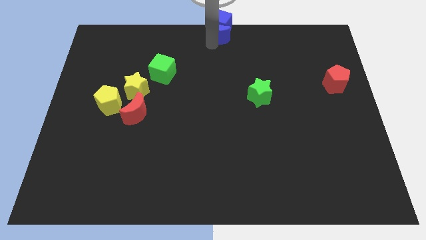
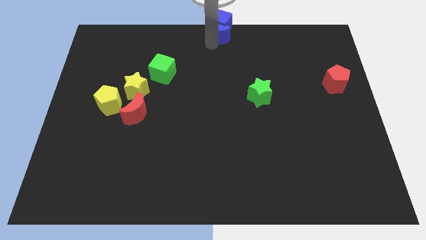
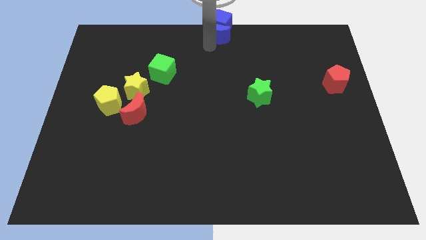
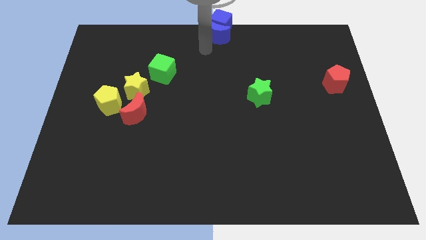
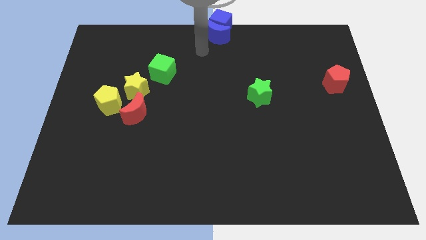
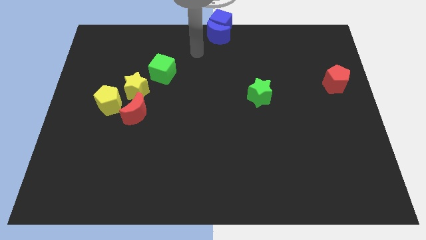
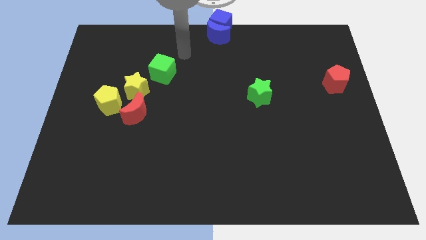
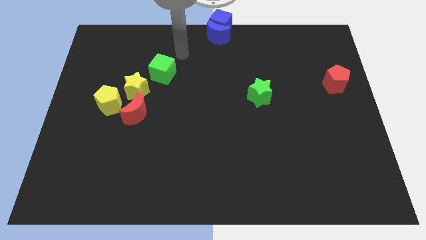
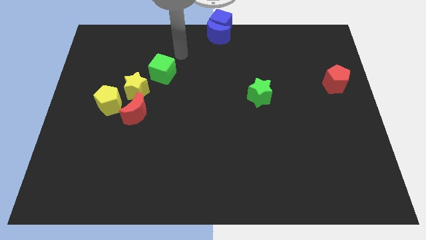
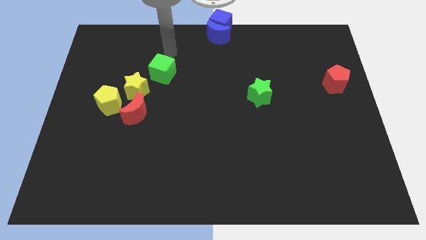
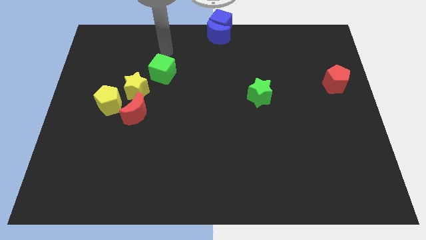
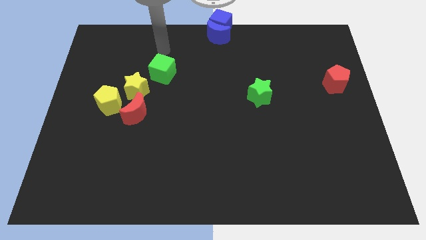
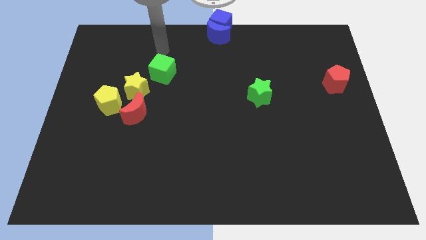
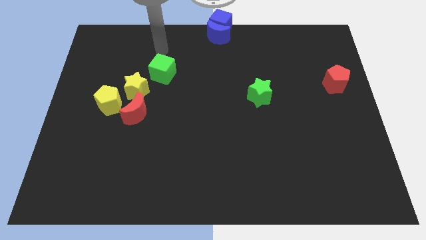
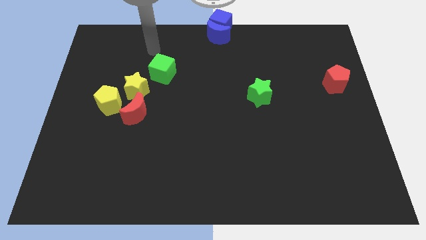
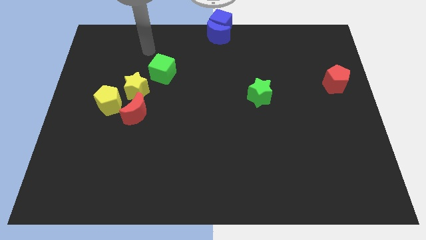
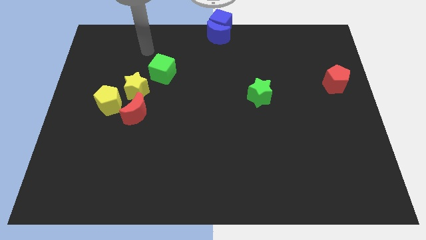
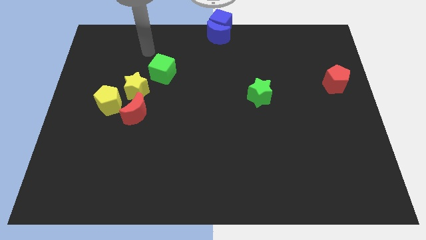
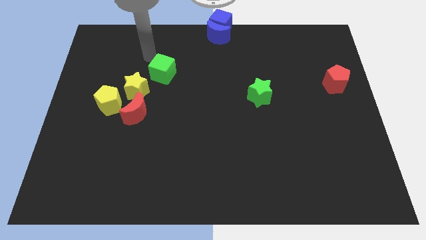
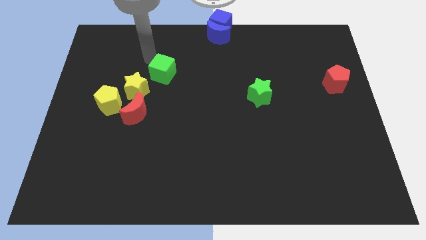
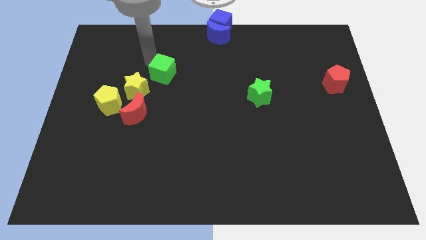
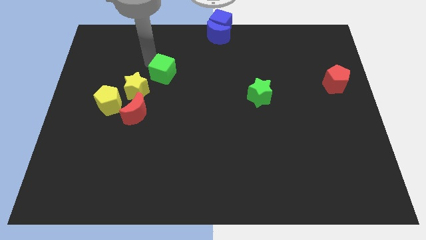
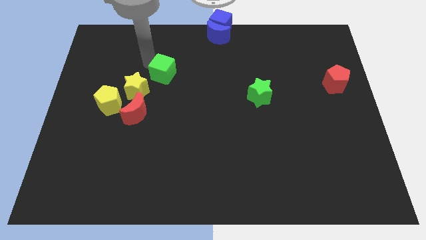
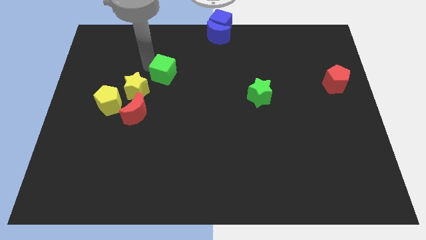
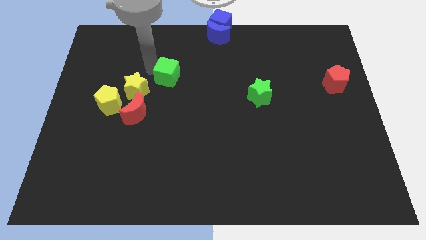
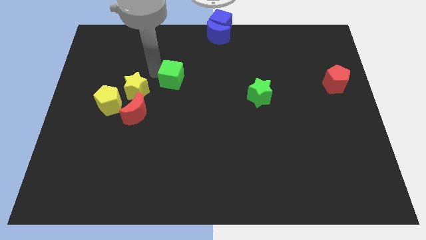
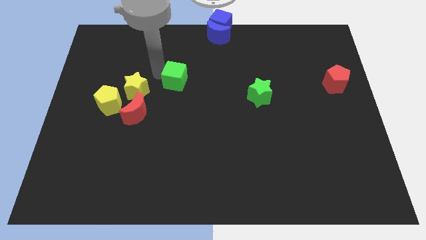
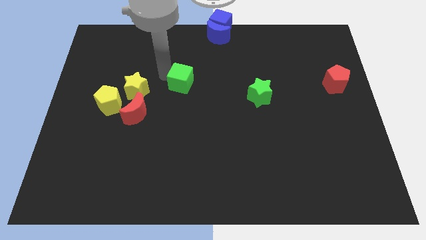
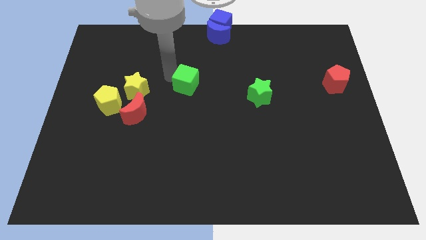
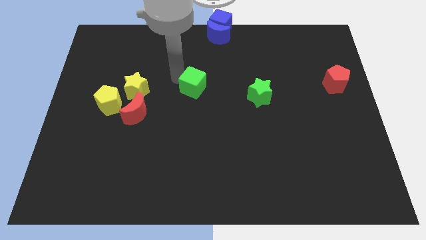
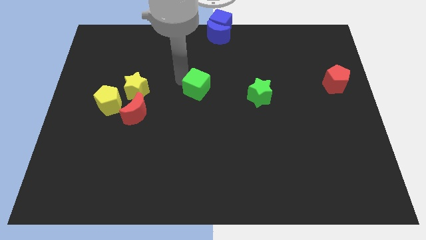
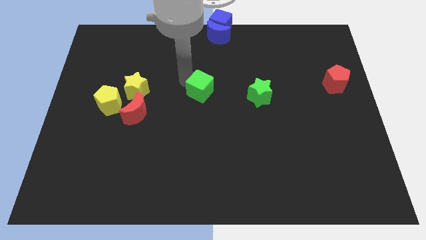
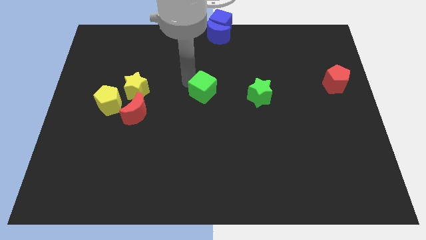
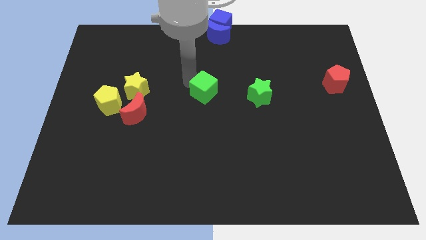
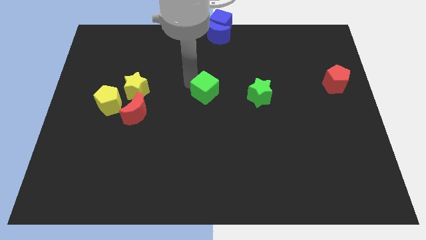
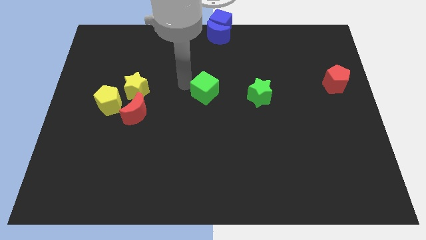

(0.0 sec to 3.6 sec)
put the green cube vertically below the blue moon

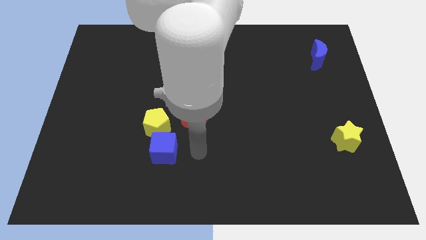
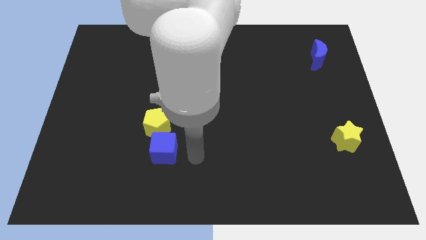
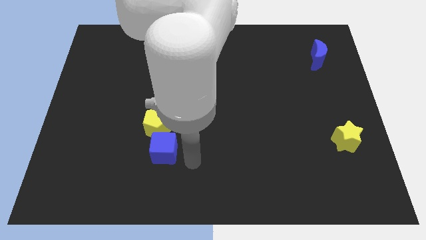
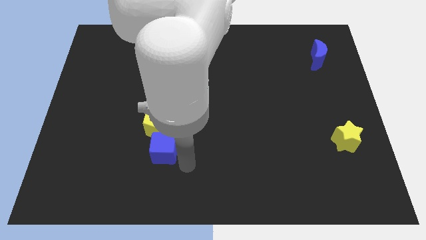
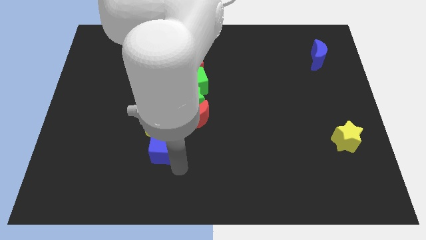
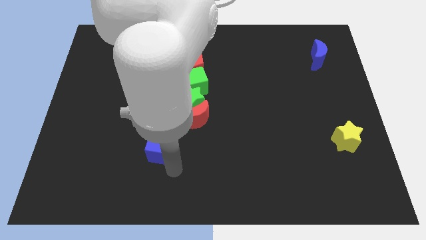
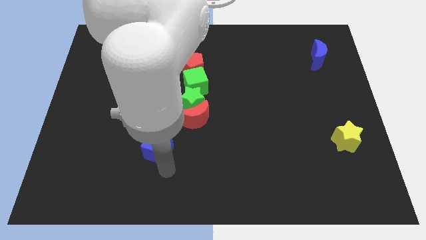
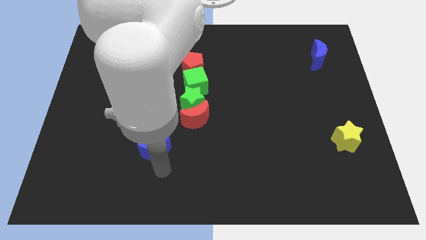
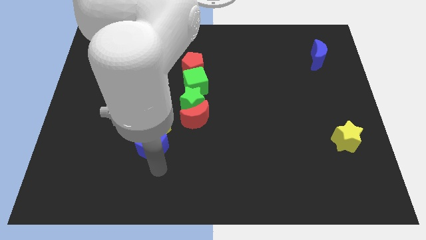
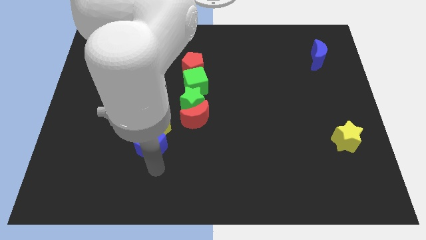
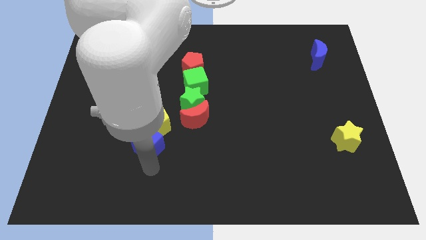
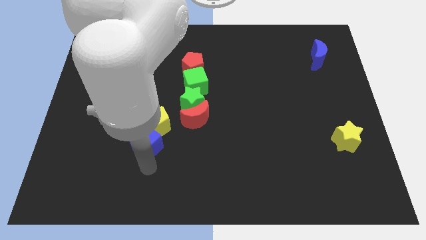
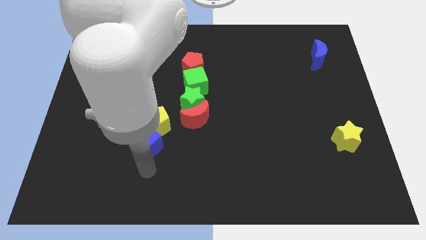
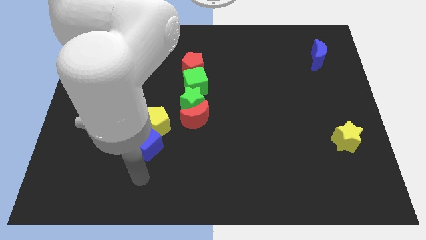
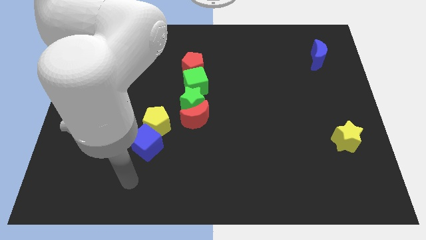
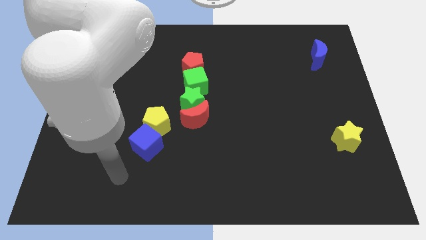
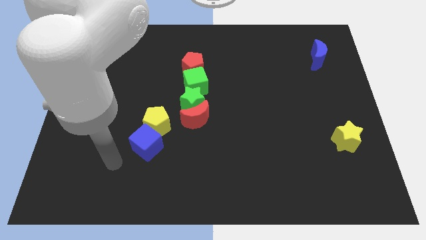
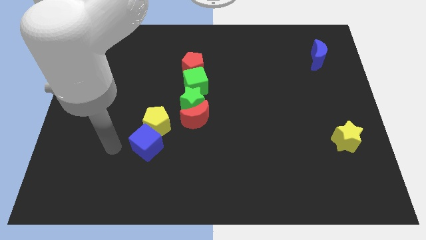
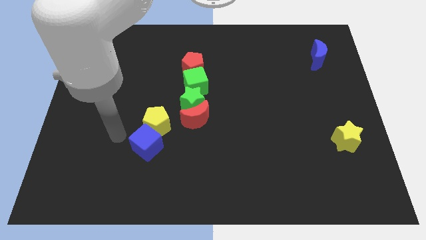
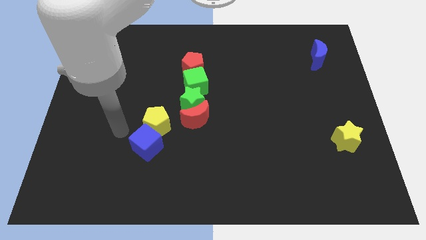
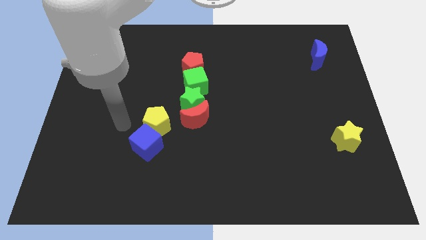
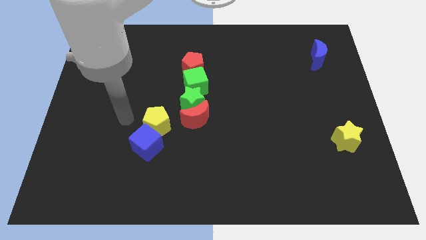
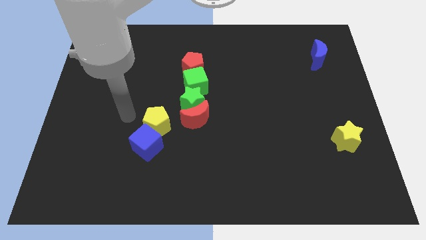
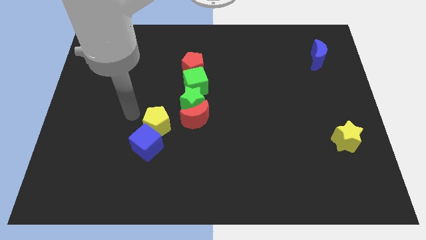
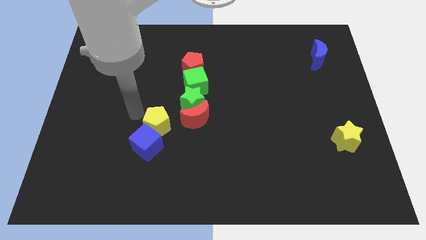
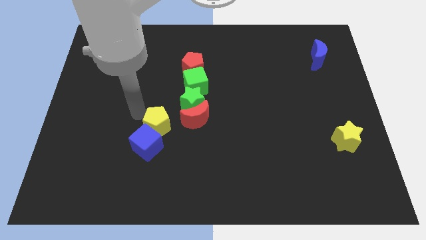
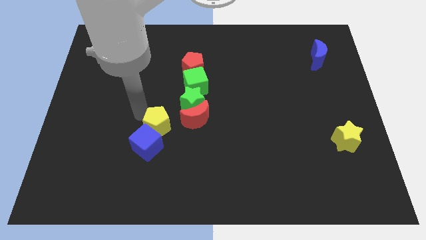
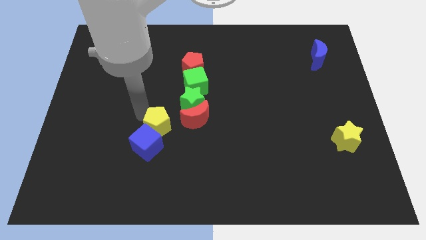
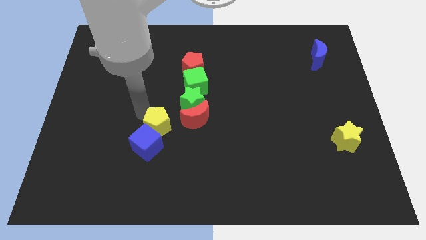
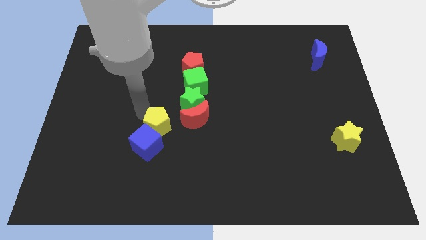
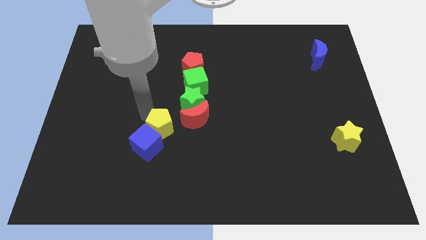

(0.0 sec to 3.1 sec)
push the blue cube to the bottom of the yellow pentagon

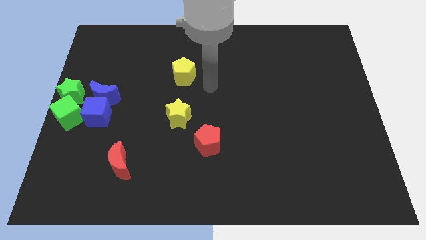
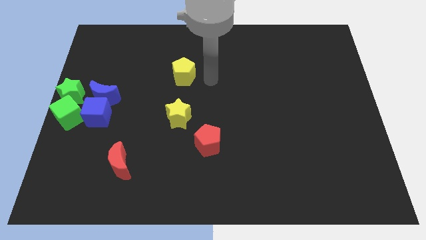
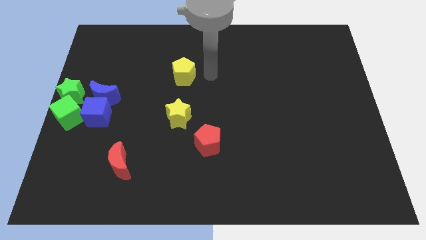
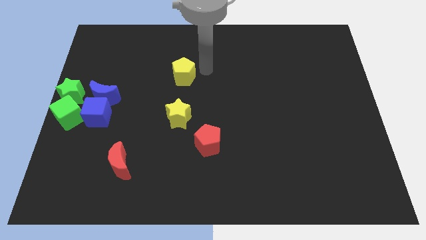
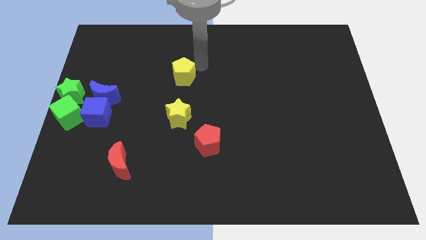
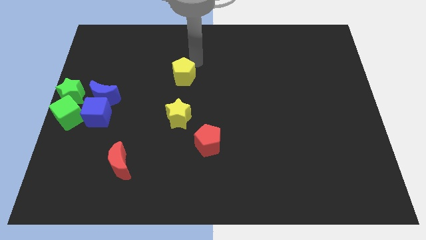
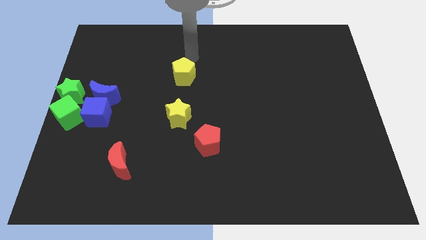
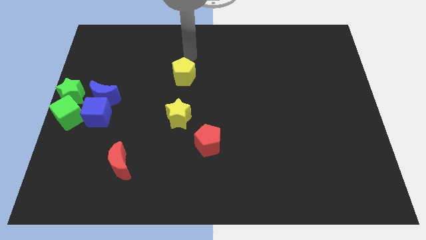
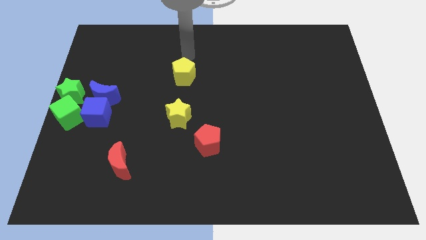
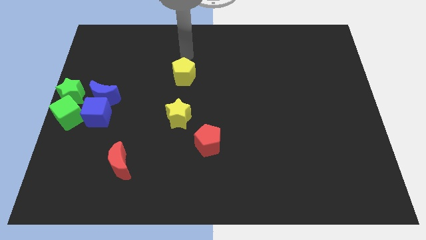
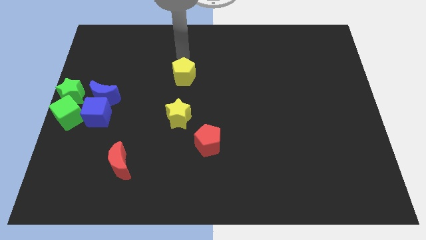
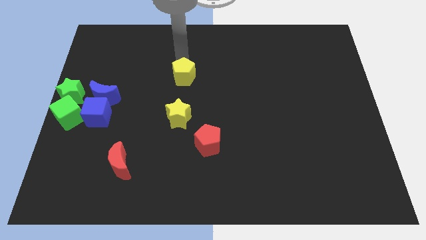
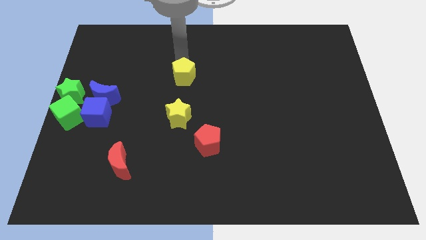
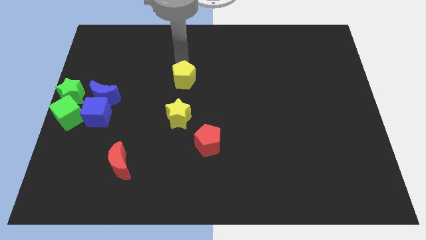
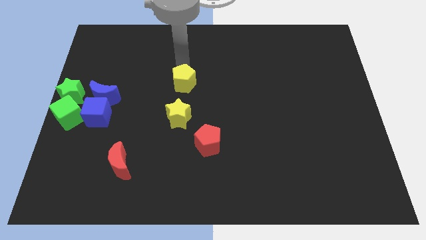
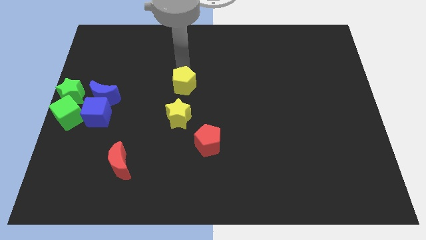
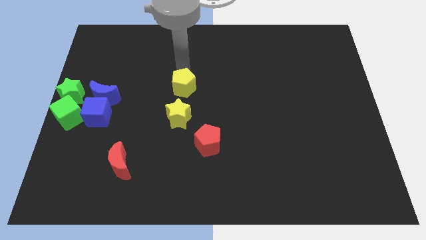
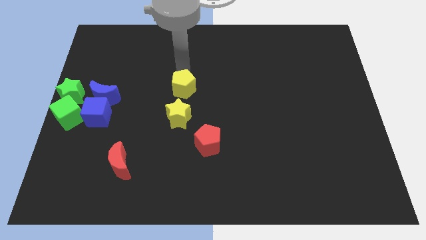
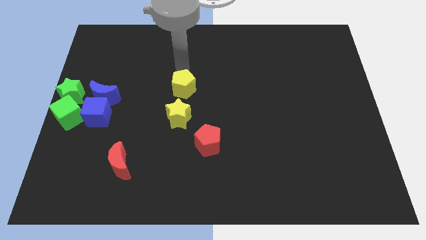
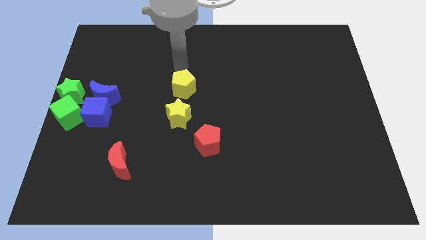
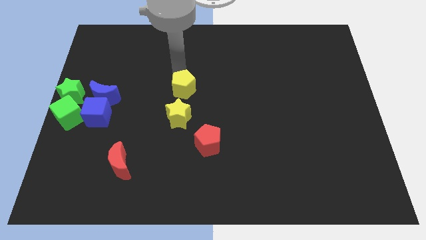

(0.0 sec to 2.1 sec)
push yellow pentagon towards the yellow star
